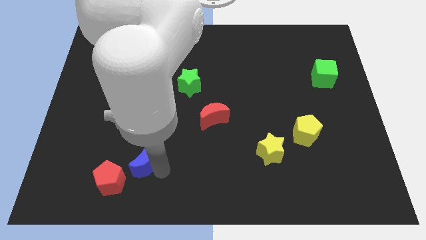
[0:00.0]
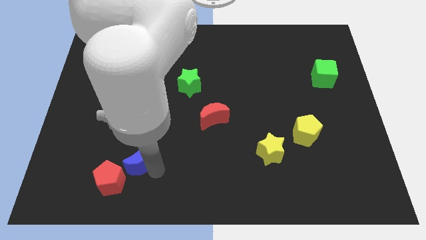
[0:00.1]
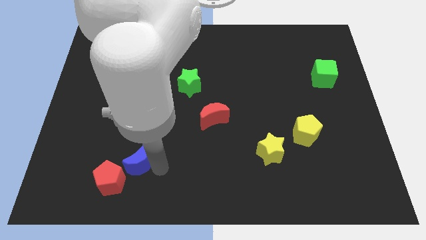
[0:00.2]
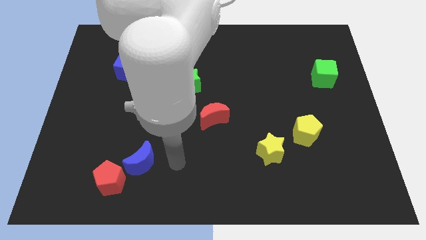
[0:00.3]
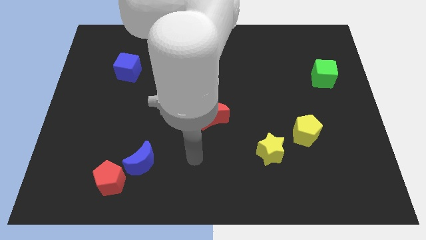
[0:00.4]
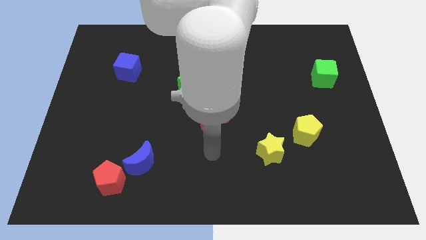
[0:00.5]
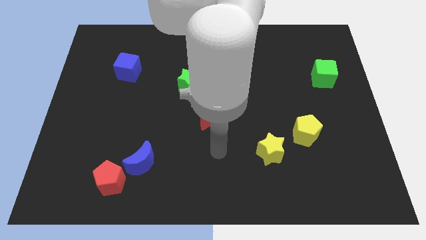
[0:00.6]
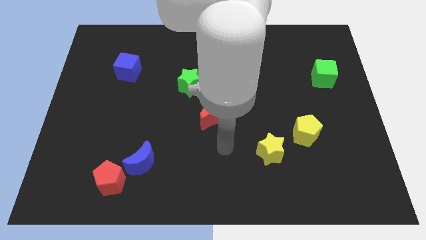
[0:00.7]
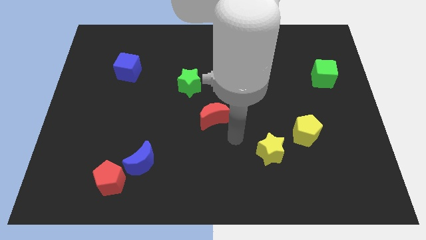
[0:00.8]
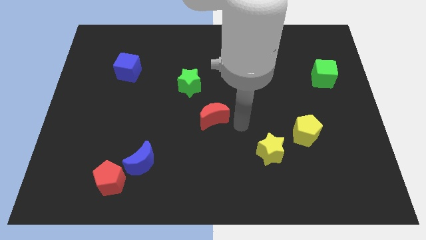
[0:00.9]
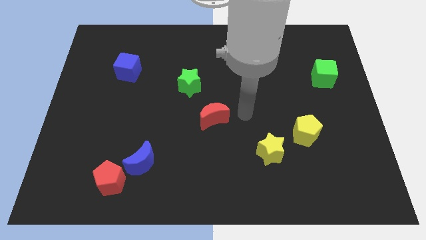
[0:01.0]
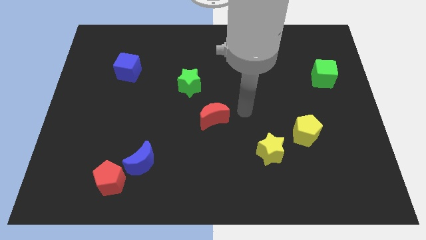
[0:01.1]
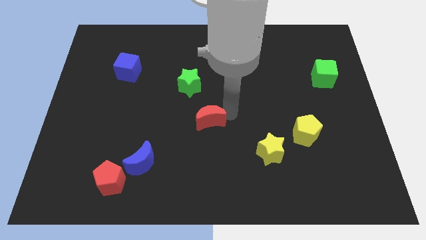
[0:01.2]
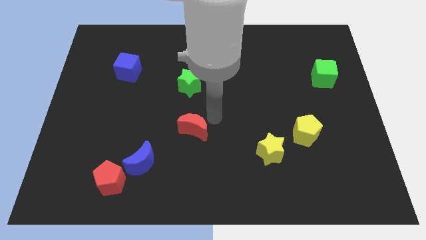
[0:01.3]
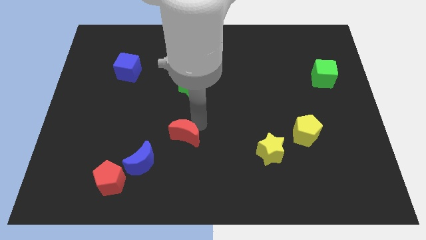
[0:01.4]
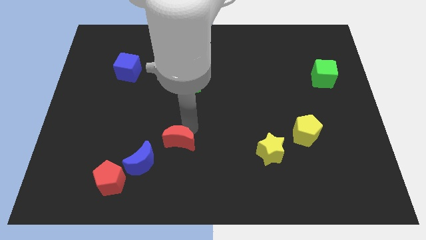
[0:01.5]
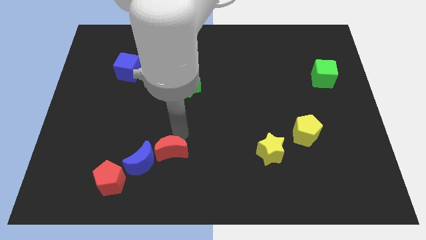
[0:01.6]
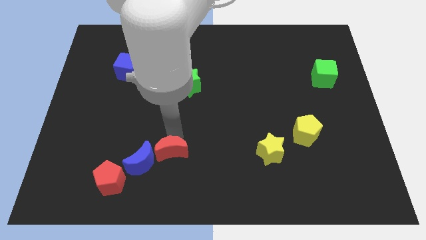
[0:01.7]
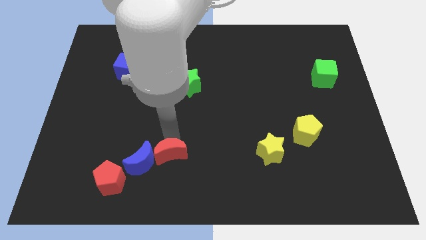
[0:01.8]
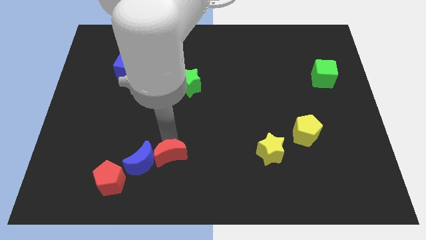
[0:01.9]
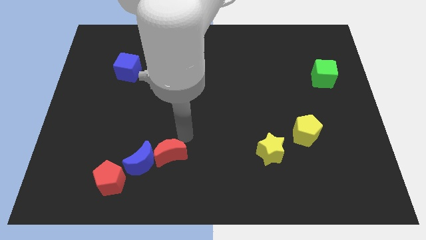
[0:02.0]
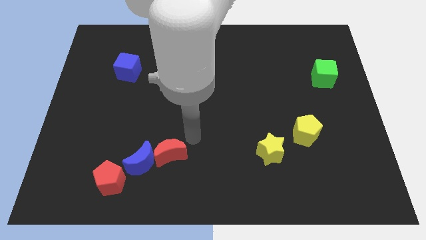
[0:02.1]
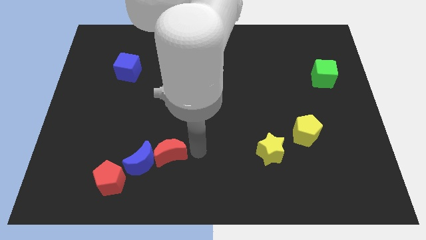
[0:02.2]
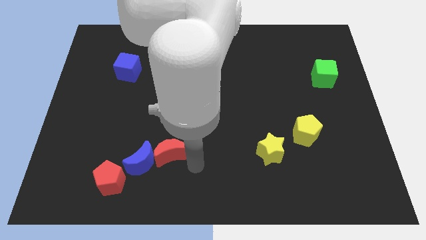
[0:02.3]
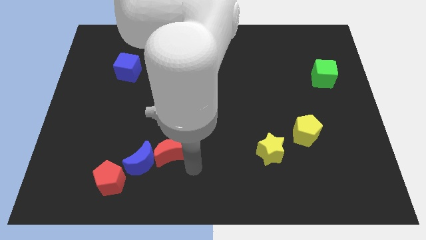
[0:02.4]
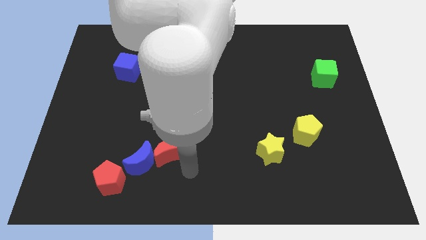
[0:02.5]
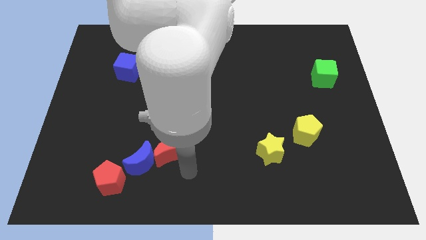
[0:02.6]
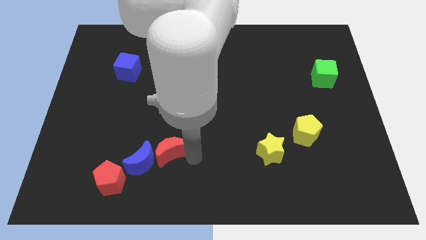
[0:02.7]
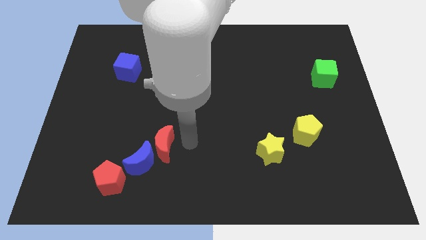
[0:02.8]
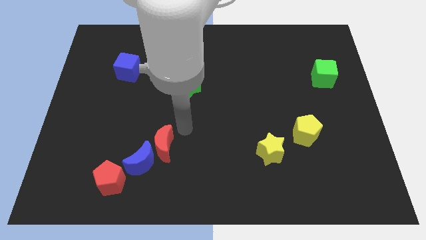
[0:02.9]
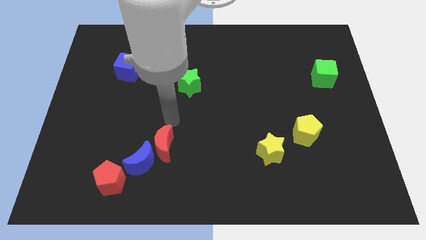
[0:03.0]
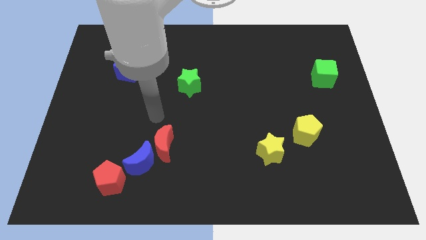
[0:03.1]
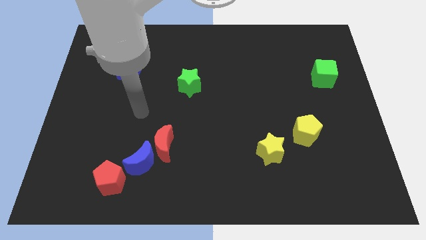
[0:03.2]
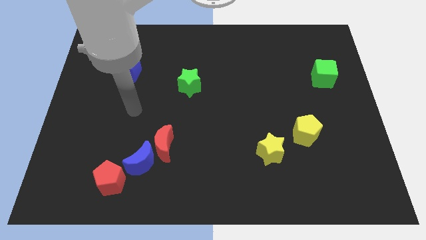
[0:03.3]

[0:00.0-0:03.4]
place the red moon diagonally at the top right of the blue moon

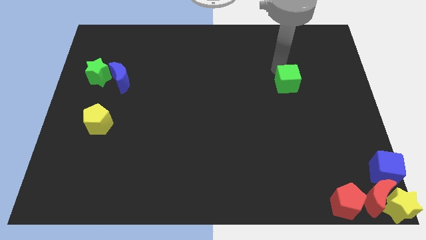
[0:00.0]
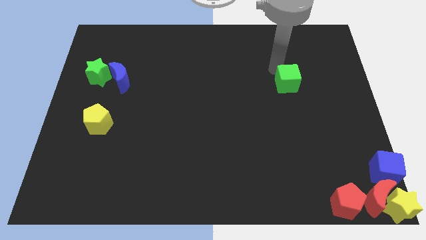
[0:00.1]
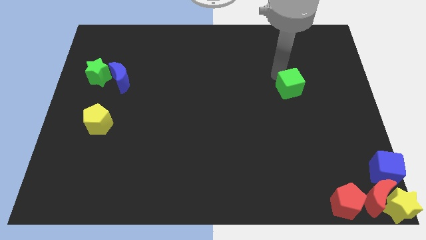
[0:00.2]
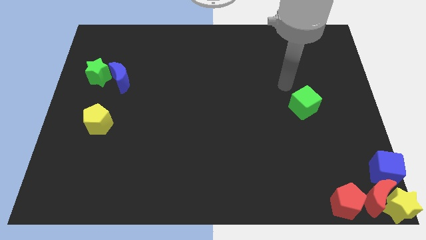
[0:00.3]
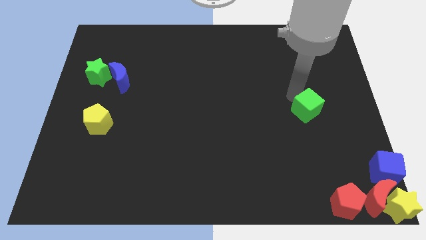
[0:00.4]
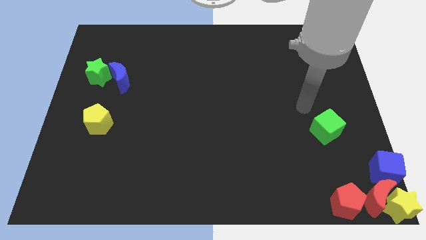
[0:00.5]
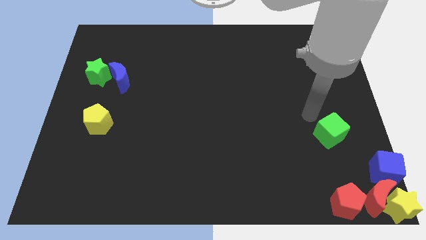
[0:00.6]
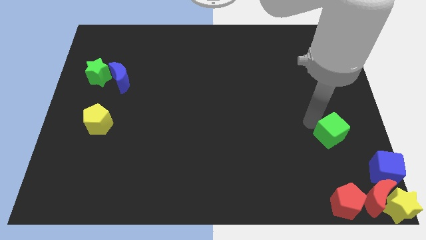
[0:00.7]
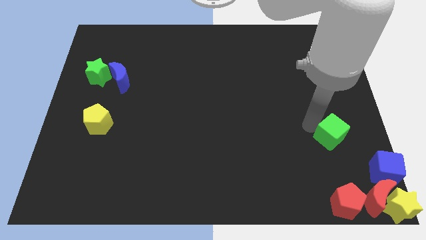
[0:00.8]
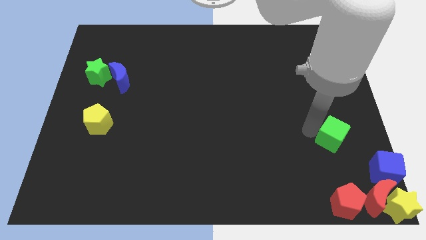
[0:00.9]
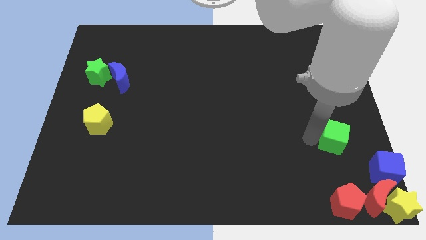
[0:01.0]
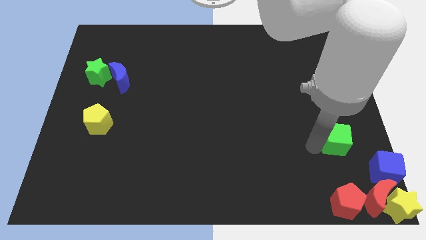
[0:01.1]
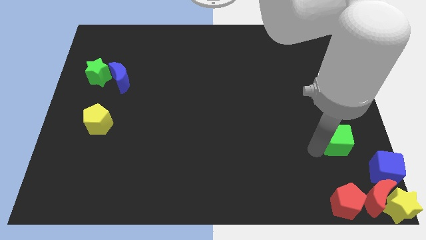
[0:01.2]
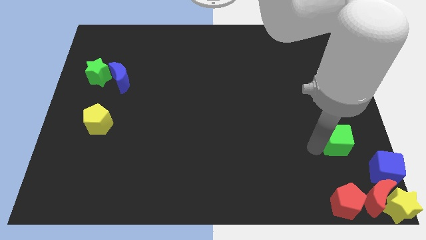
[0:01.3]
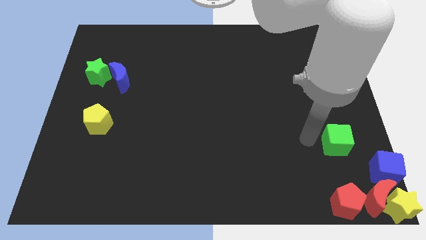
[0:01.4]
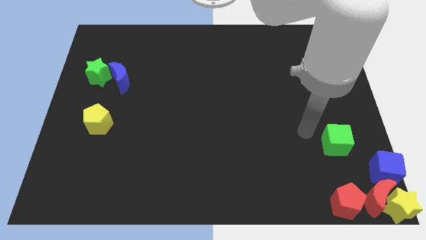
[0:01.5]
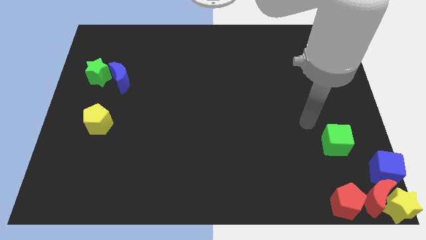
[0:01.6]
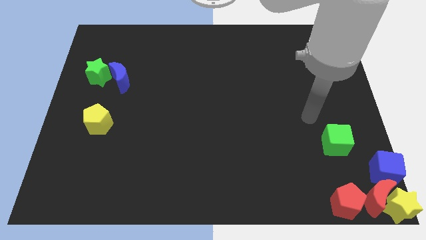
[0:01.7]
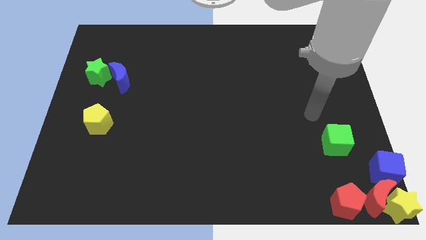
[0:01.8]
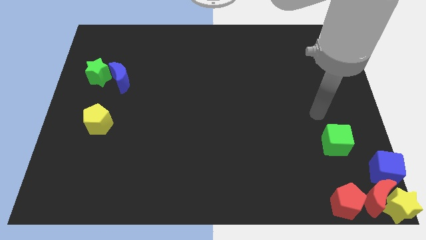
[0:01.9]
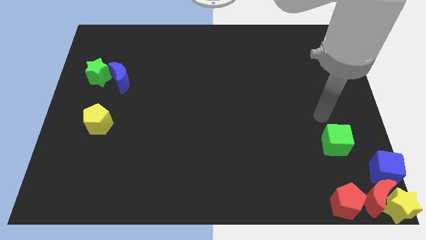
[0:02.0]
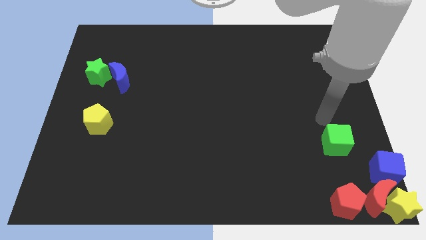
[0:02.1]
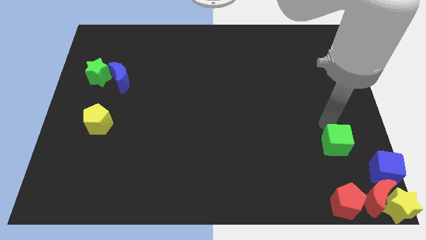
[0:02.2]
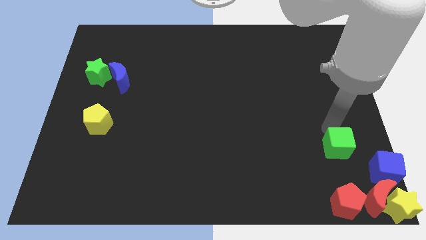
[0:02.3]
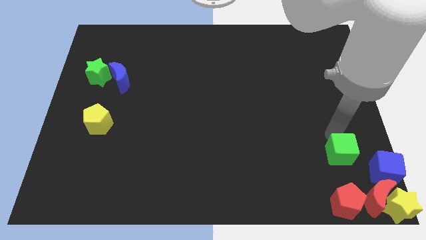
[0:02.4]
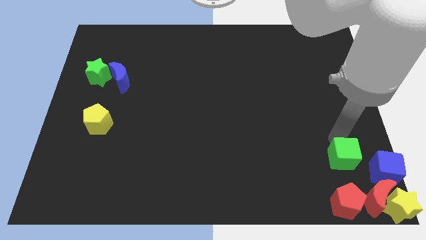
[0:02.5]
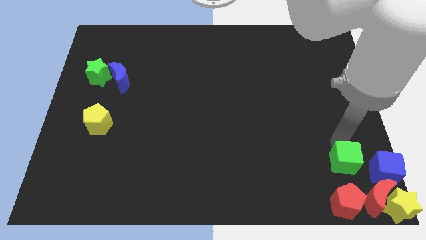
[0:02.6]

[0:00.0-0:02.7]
push green cube above red crescent

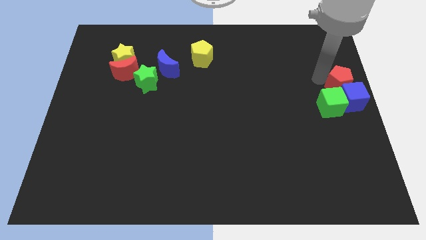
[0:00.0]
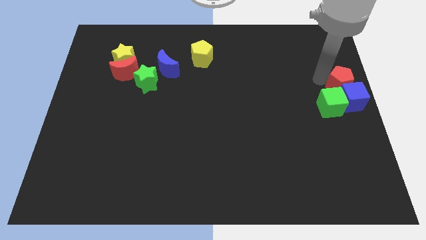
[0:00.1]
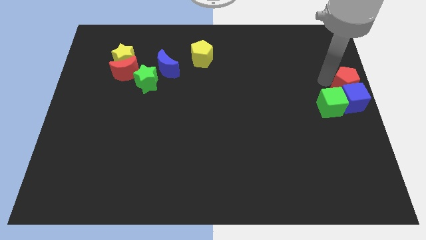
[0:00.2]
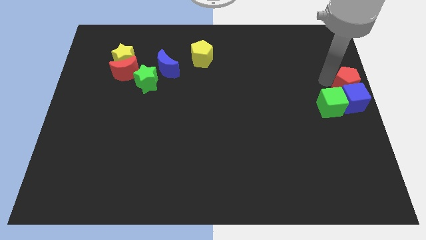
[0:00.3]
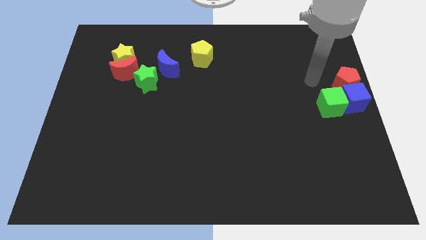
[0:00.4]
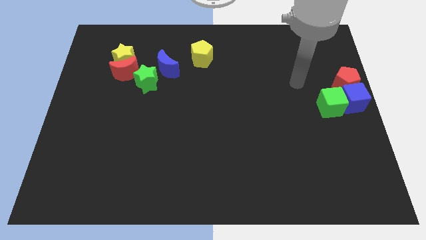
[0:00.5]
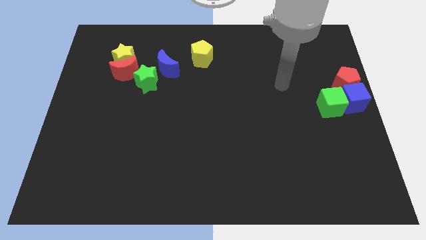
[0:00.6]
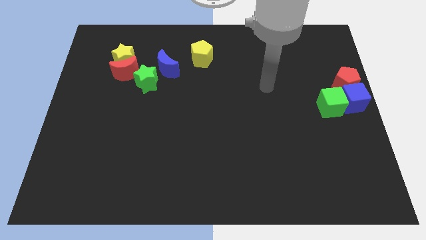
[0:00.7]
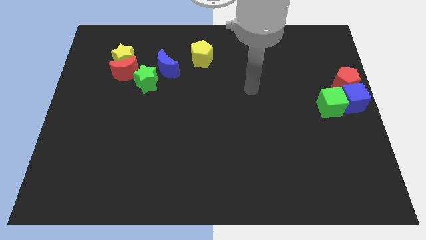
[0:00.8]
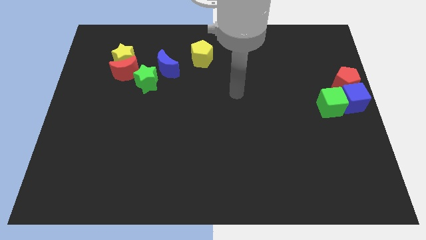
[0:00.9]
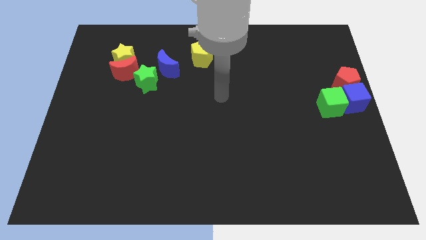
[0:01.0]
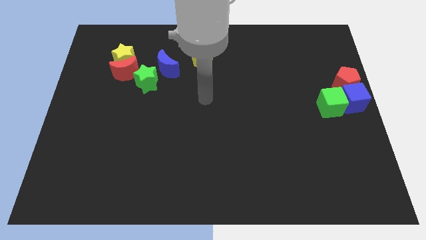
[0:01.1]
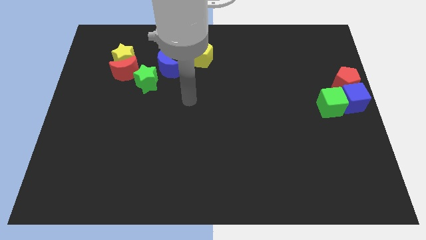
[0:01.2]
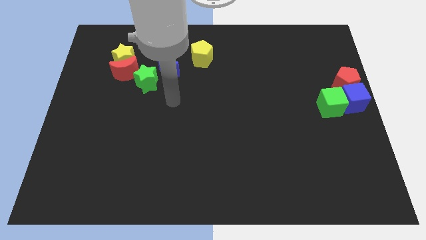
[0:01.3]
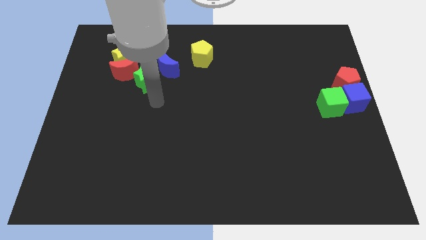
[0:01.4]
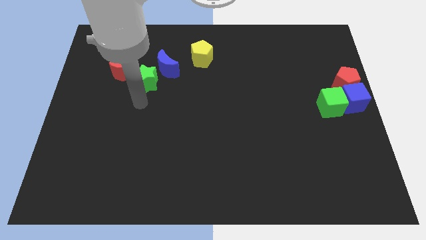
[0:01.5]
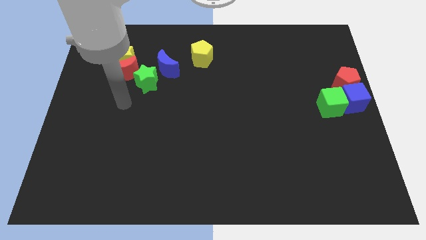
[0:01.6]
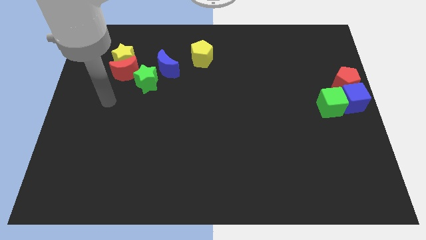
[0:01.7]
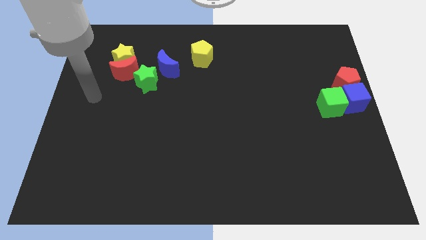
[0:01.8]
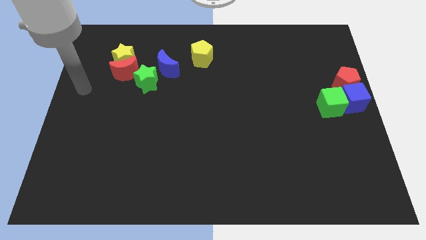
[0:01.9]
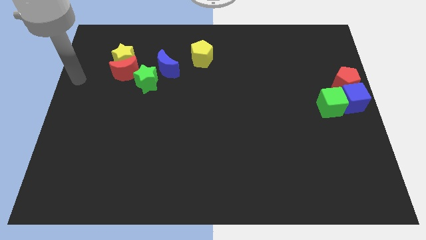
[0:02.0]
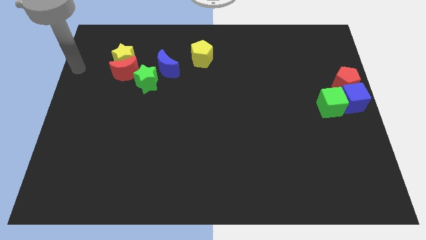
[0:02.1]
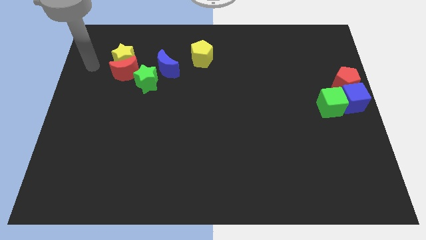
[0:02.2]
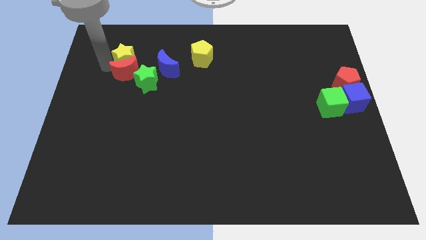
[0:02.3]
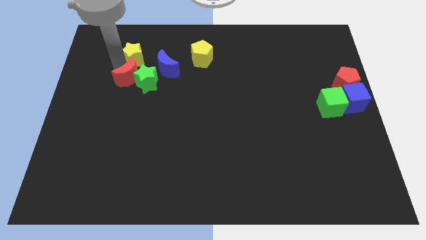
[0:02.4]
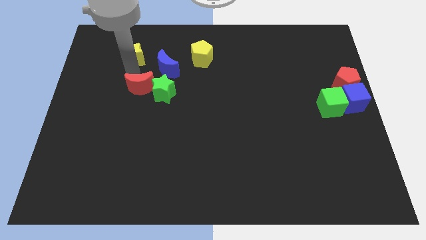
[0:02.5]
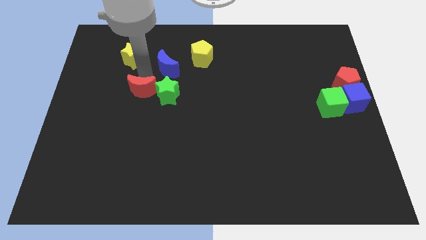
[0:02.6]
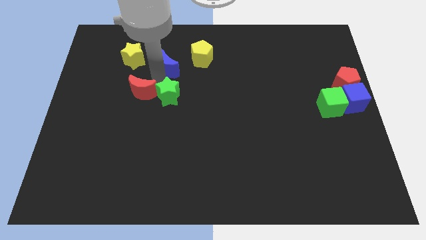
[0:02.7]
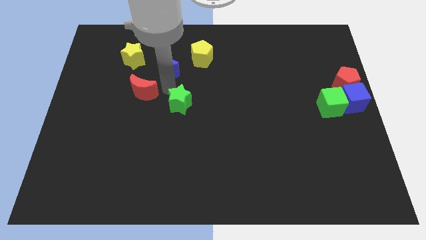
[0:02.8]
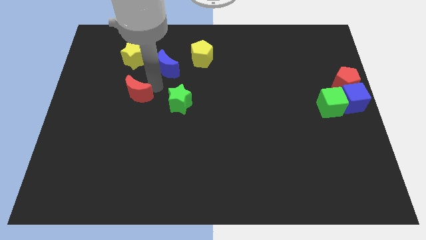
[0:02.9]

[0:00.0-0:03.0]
separate the red crescent and green star from yellow star
